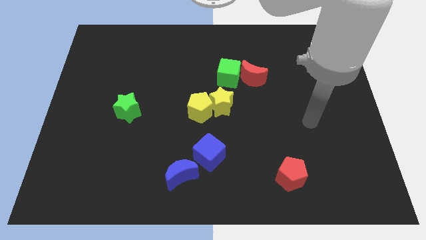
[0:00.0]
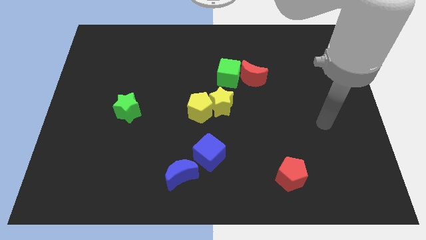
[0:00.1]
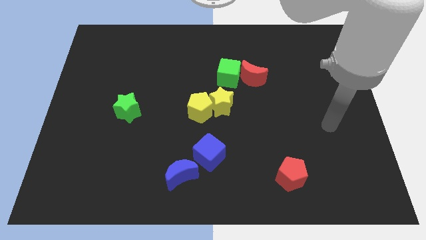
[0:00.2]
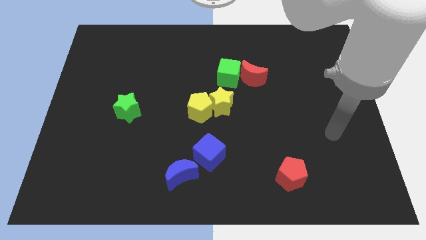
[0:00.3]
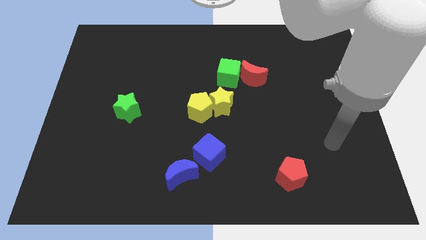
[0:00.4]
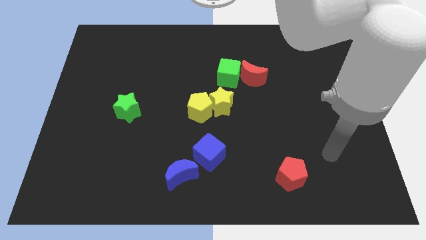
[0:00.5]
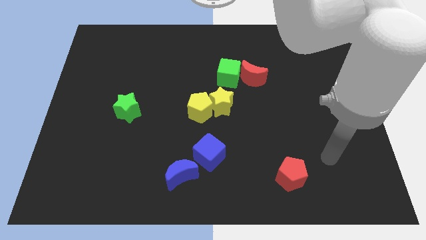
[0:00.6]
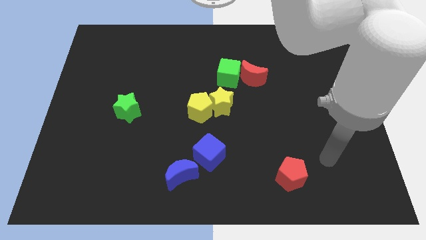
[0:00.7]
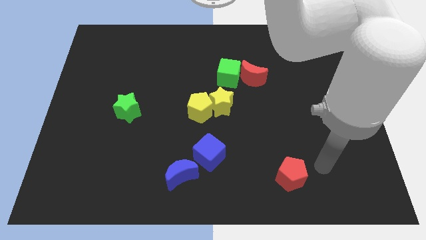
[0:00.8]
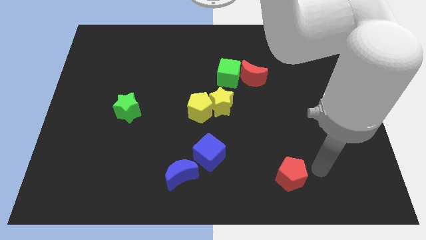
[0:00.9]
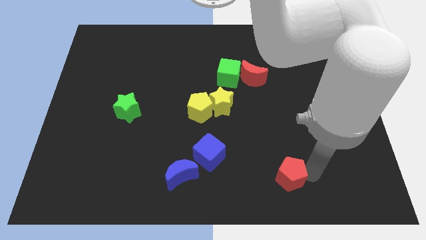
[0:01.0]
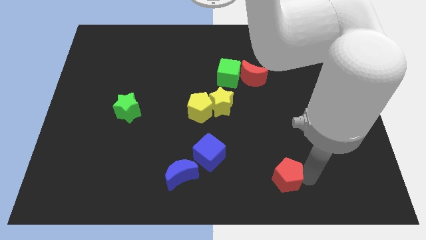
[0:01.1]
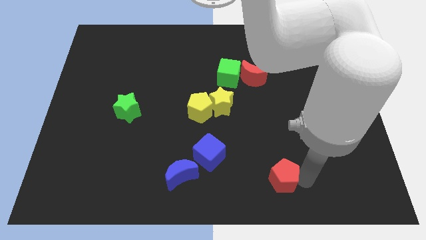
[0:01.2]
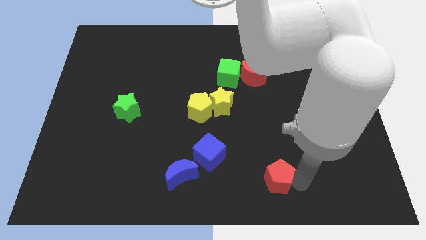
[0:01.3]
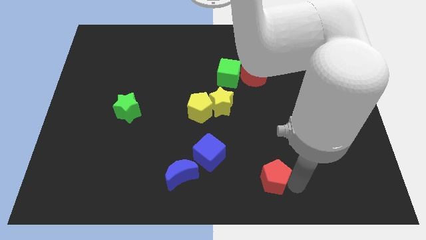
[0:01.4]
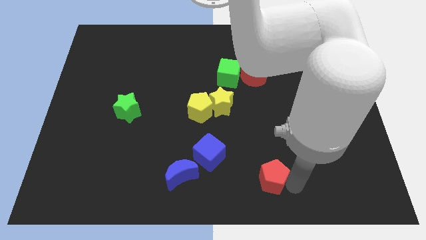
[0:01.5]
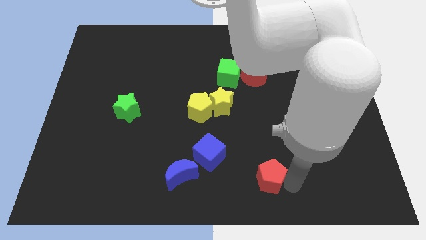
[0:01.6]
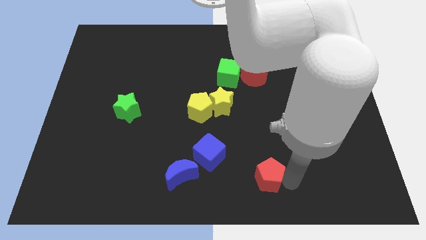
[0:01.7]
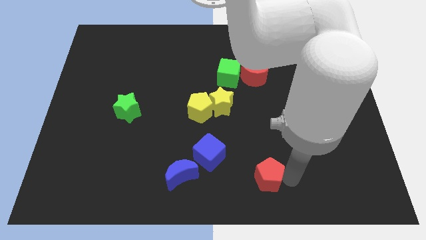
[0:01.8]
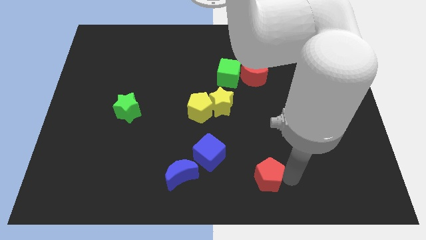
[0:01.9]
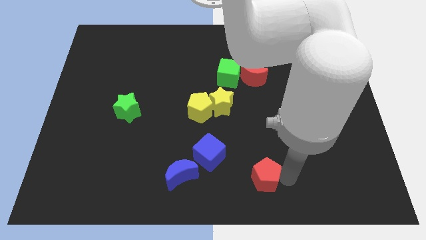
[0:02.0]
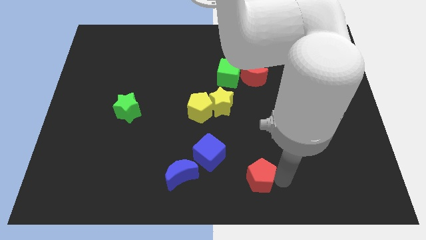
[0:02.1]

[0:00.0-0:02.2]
slide the red pentagon vertically below the red moon

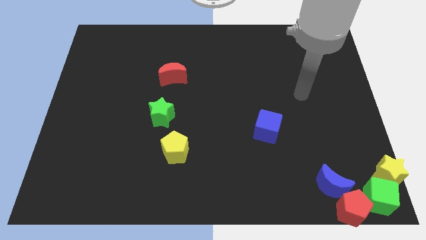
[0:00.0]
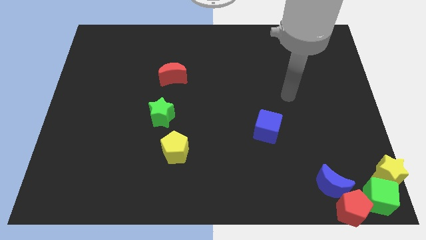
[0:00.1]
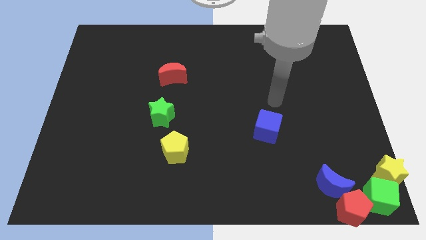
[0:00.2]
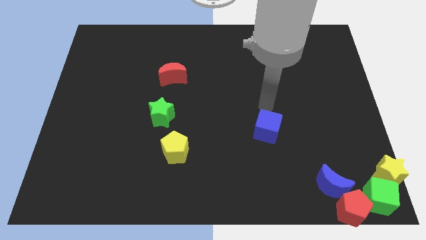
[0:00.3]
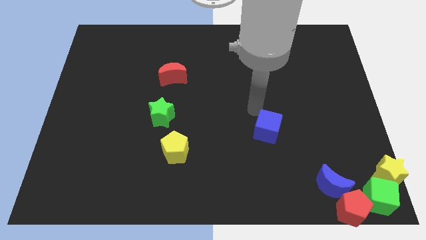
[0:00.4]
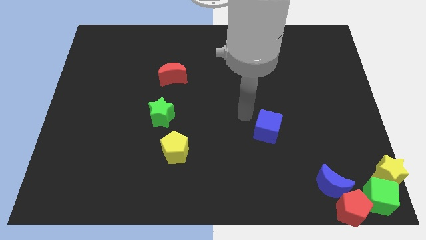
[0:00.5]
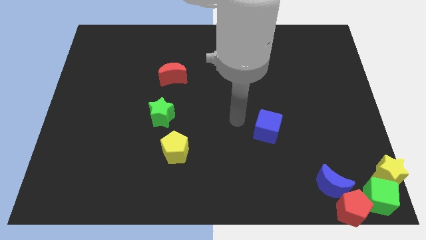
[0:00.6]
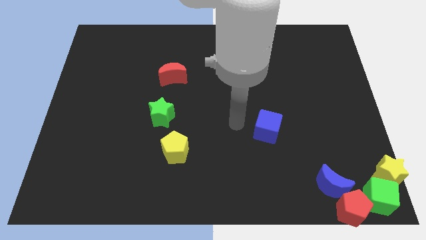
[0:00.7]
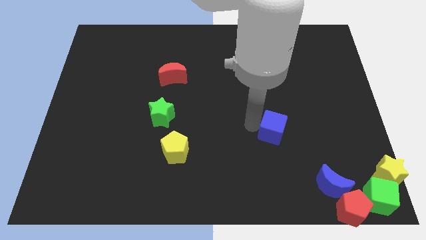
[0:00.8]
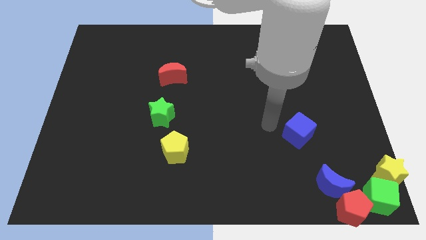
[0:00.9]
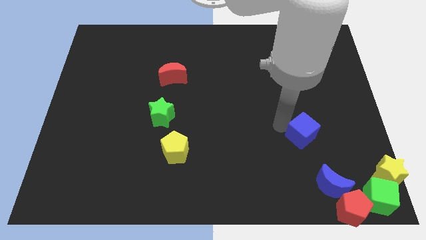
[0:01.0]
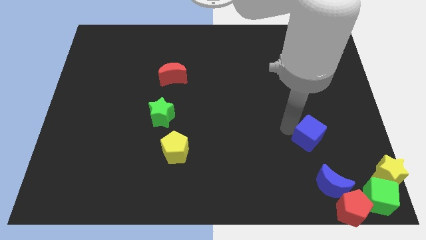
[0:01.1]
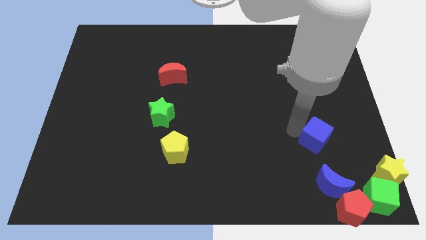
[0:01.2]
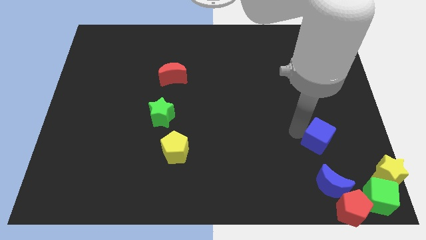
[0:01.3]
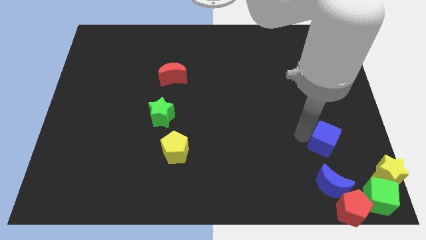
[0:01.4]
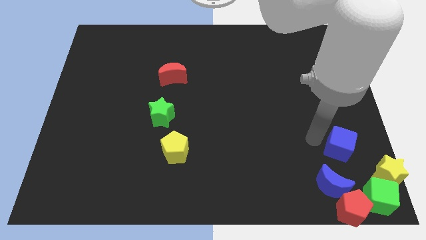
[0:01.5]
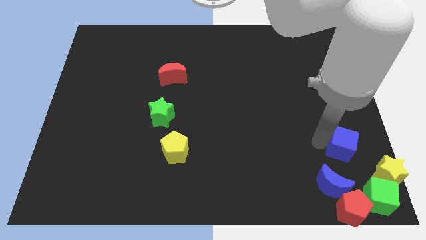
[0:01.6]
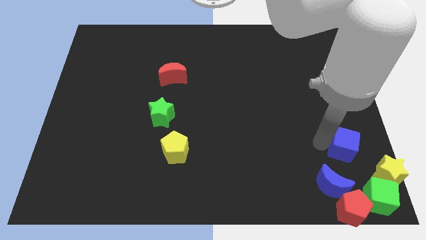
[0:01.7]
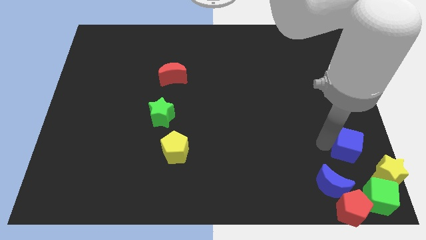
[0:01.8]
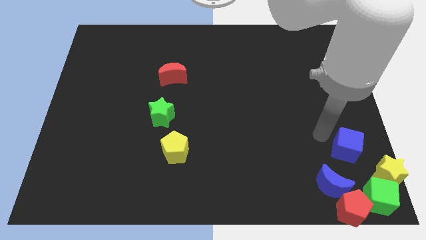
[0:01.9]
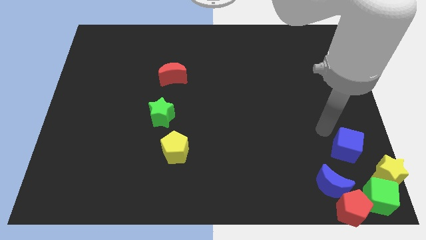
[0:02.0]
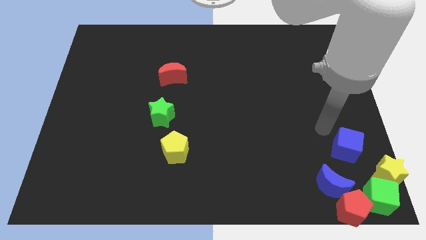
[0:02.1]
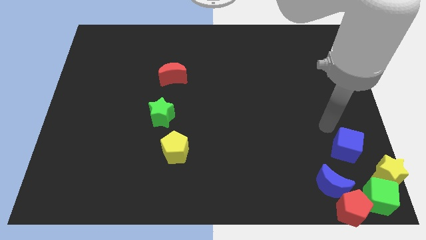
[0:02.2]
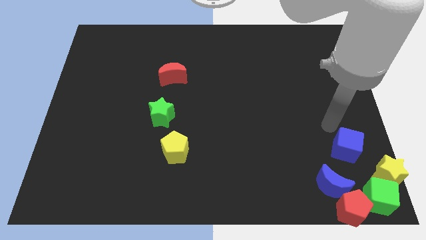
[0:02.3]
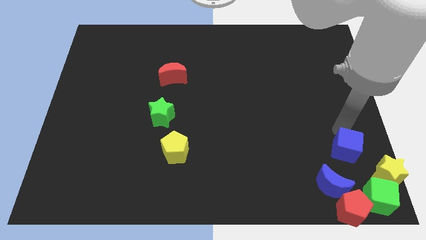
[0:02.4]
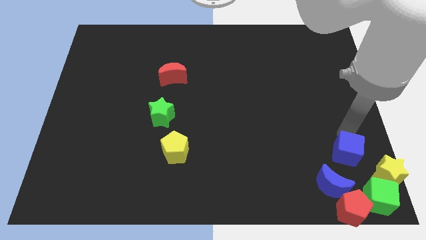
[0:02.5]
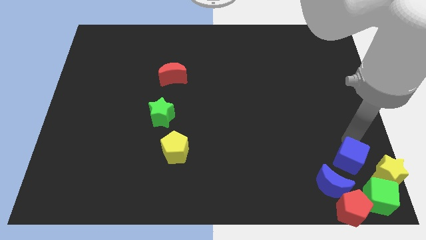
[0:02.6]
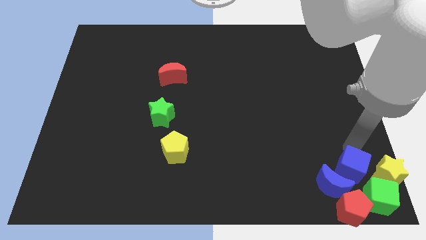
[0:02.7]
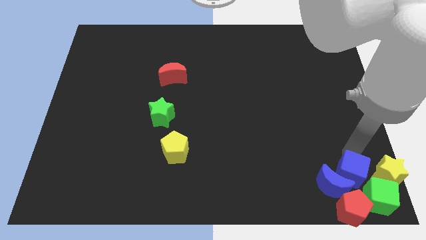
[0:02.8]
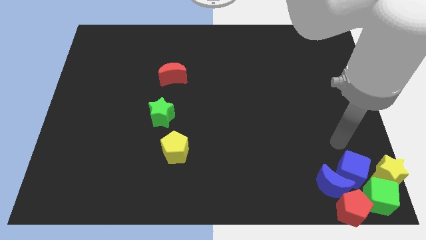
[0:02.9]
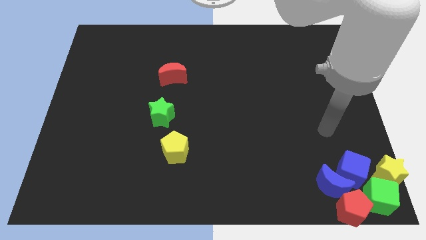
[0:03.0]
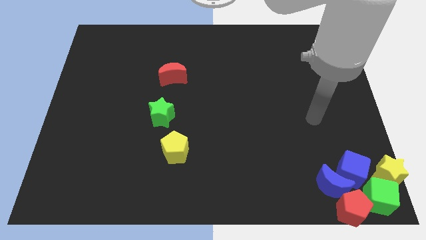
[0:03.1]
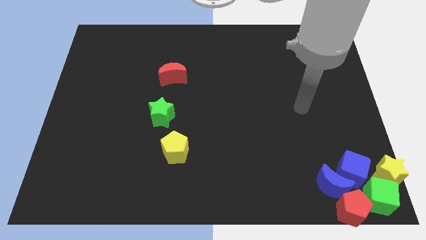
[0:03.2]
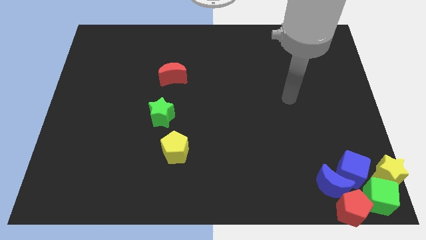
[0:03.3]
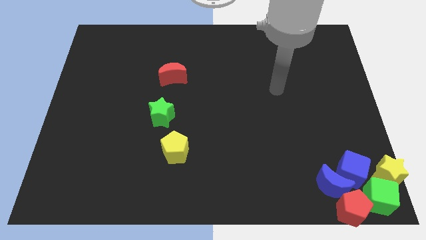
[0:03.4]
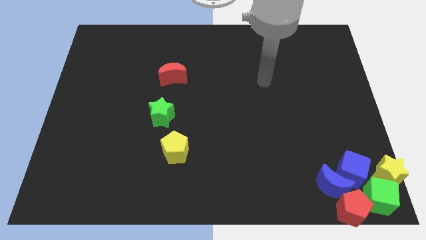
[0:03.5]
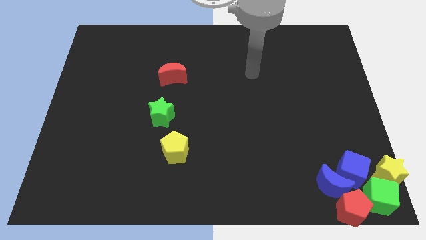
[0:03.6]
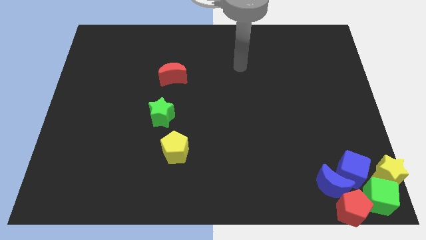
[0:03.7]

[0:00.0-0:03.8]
push the blue cube into the blue moon

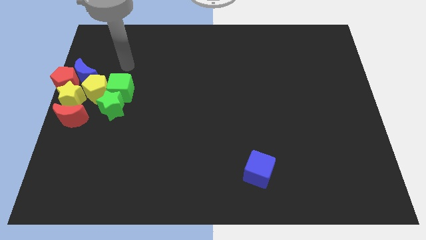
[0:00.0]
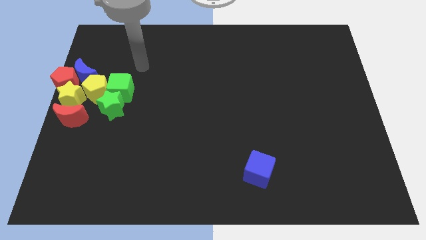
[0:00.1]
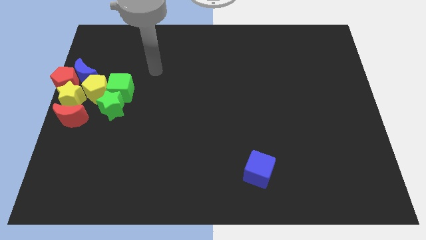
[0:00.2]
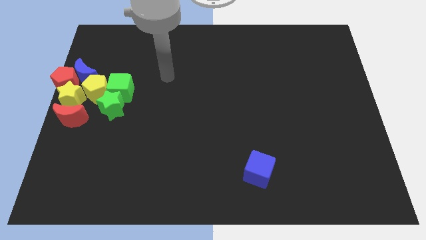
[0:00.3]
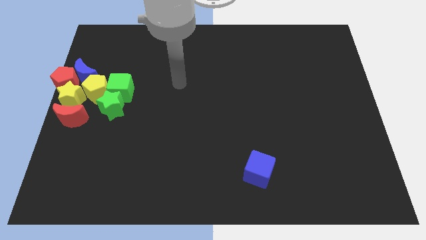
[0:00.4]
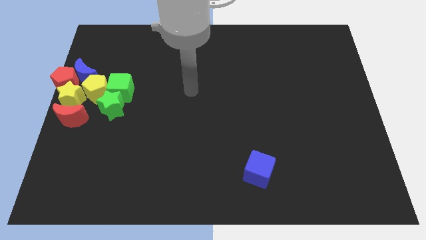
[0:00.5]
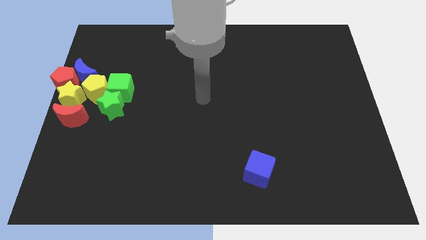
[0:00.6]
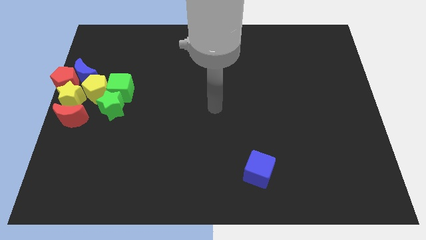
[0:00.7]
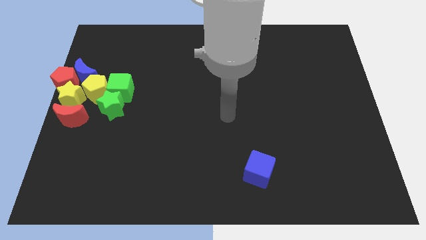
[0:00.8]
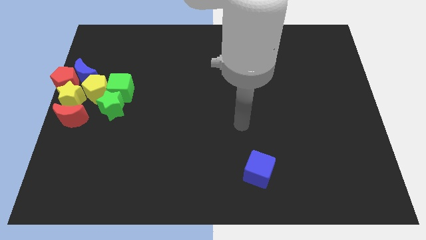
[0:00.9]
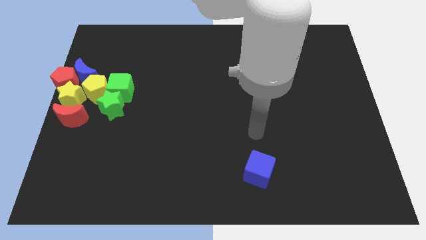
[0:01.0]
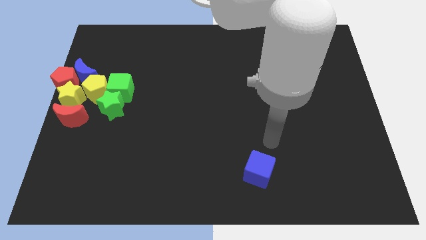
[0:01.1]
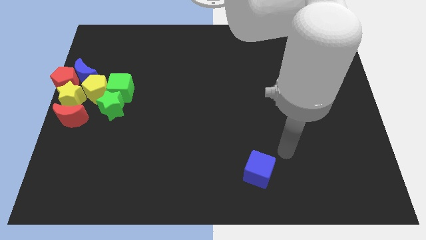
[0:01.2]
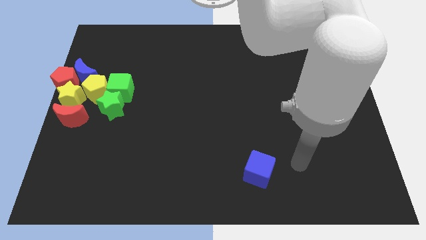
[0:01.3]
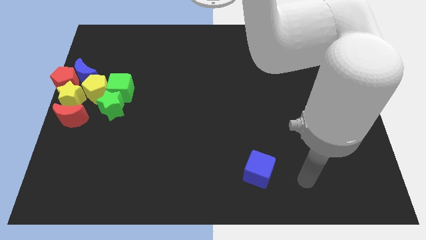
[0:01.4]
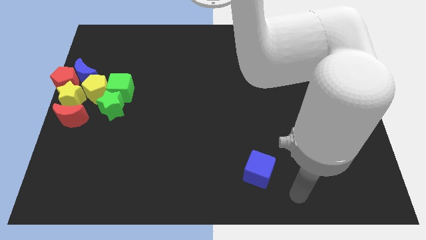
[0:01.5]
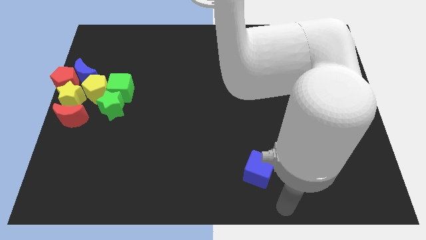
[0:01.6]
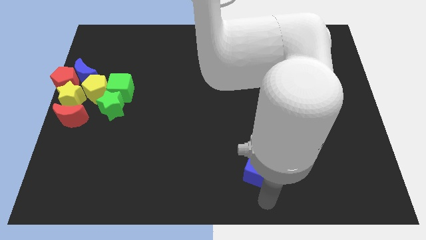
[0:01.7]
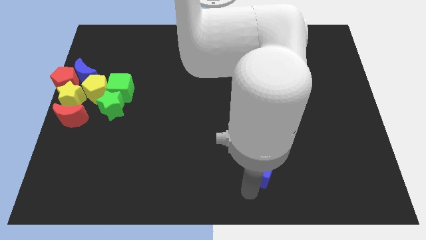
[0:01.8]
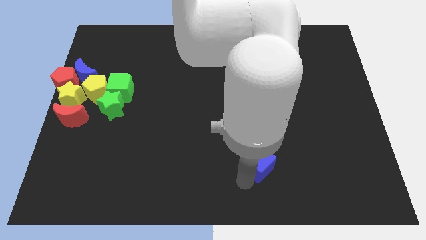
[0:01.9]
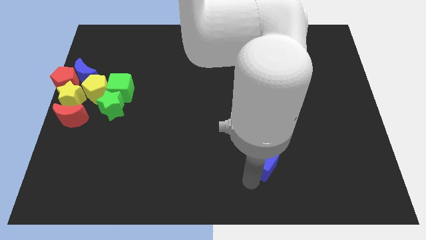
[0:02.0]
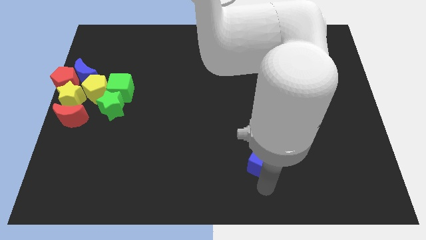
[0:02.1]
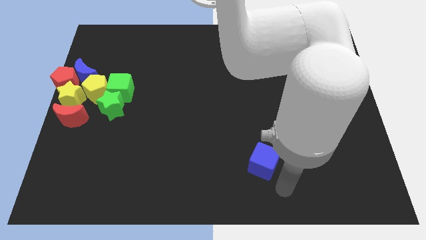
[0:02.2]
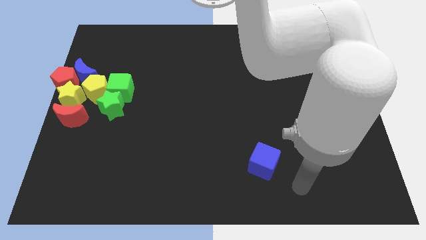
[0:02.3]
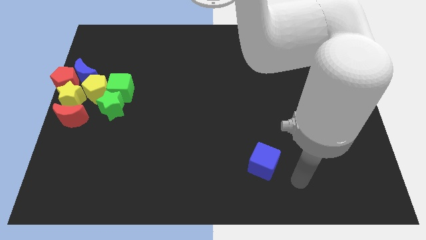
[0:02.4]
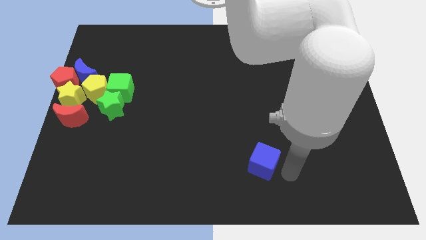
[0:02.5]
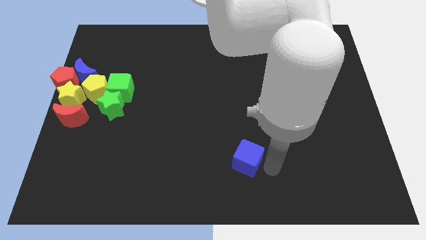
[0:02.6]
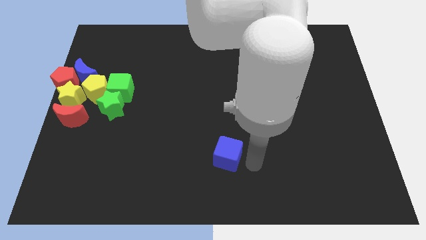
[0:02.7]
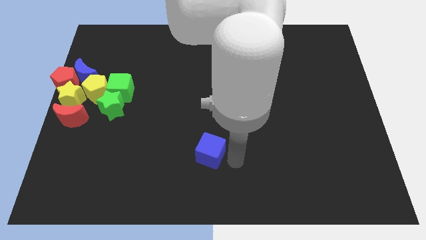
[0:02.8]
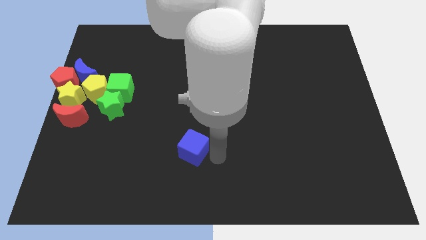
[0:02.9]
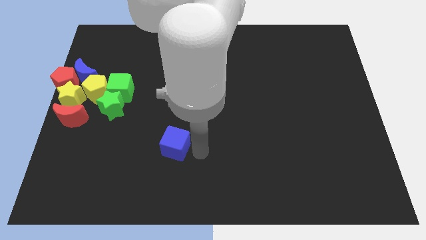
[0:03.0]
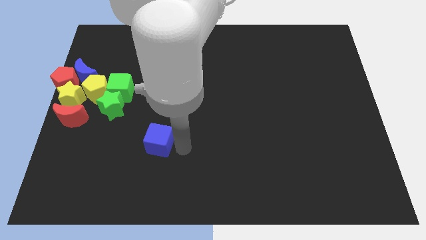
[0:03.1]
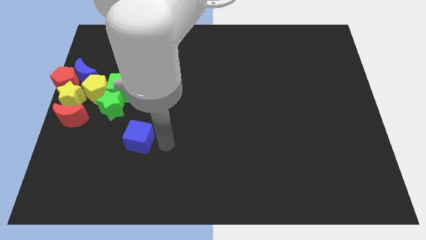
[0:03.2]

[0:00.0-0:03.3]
move the blue cube towards the green star
